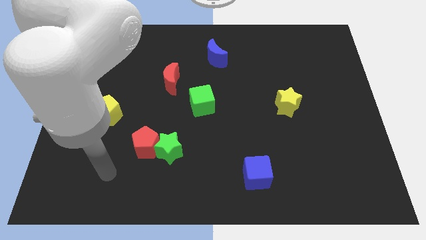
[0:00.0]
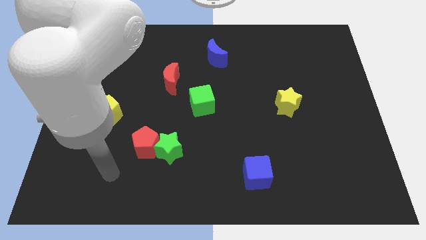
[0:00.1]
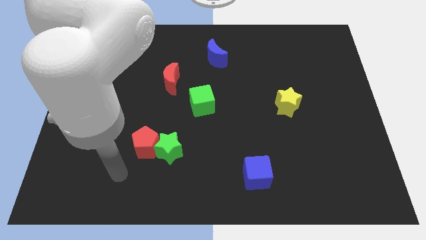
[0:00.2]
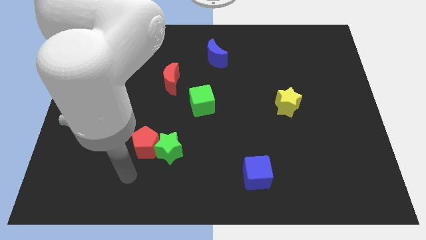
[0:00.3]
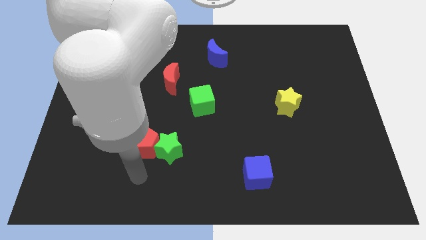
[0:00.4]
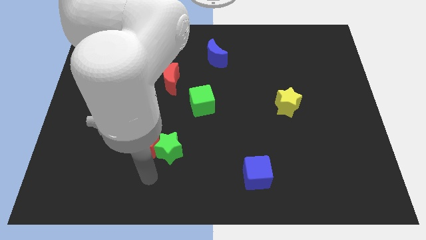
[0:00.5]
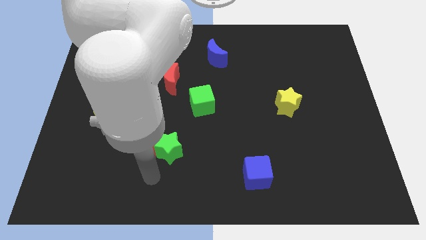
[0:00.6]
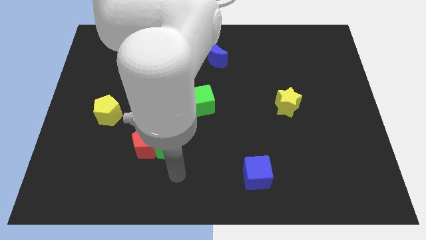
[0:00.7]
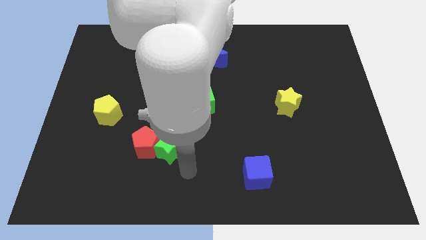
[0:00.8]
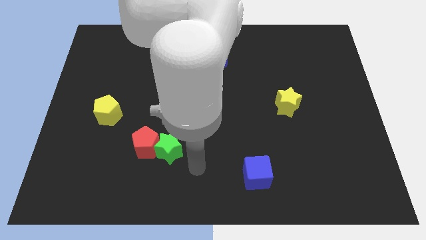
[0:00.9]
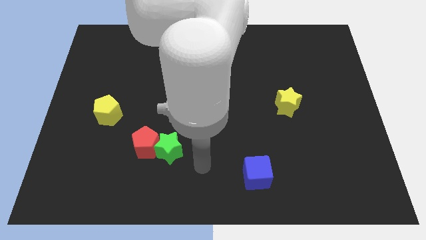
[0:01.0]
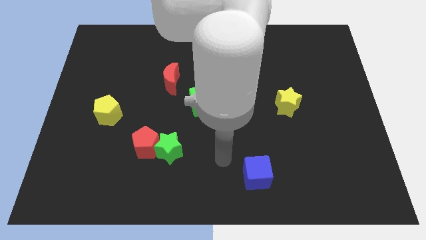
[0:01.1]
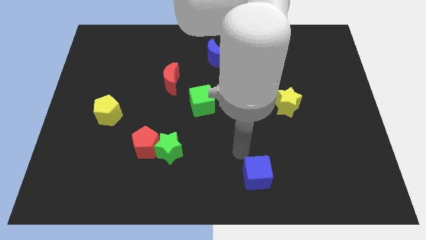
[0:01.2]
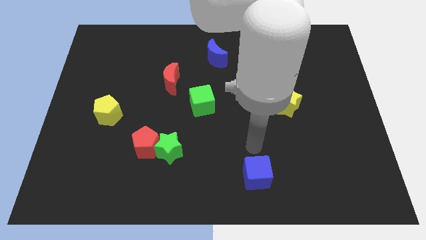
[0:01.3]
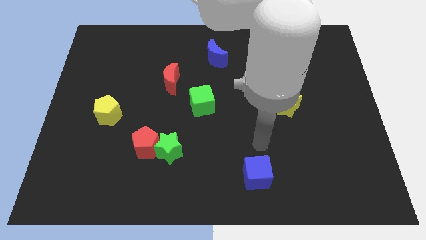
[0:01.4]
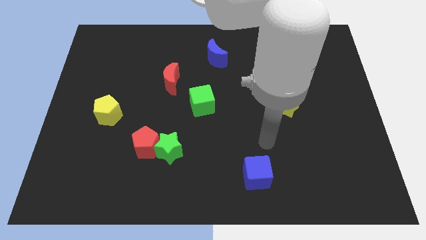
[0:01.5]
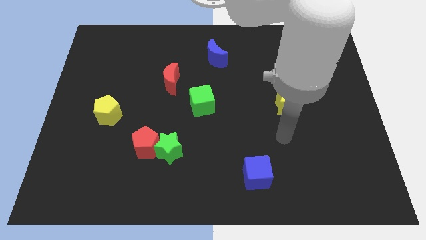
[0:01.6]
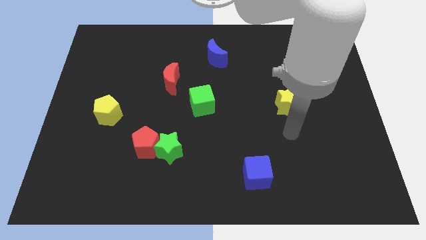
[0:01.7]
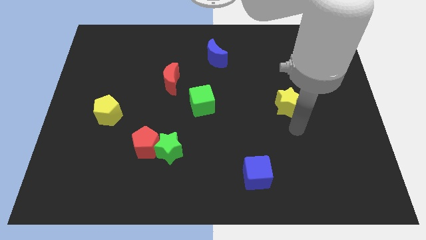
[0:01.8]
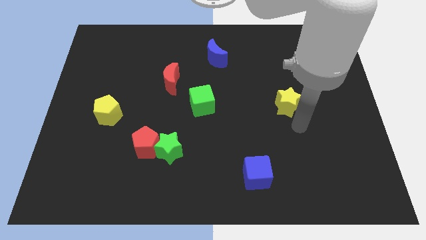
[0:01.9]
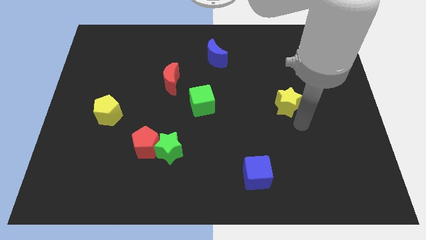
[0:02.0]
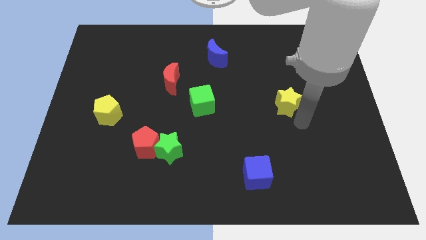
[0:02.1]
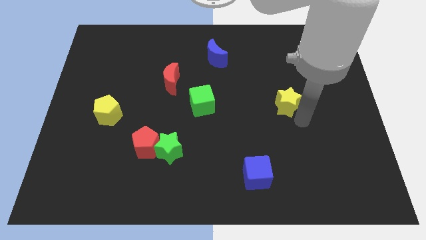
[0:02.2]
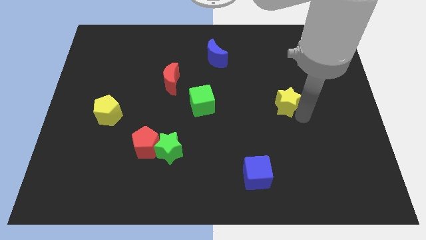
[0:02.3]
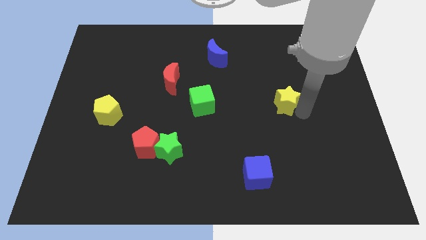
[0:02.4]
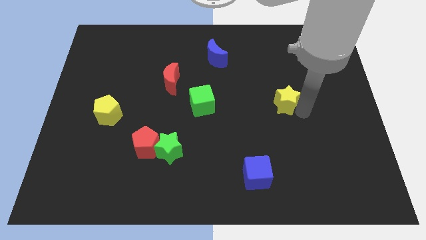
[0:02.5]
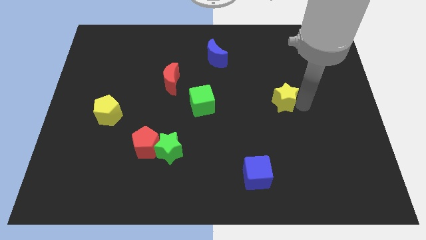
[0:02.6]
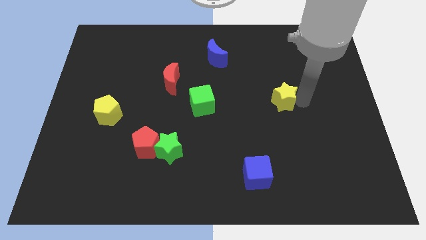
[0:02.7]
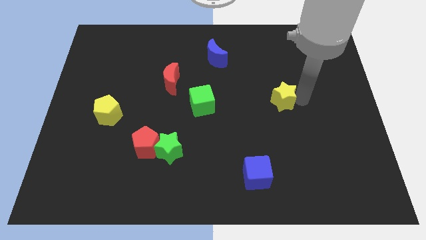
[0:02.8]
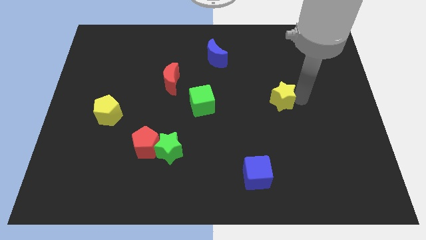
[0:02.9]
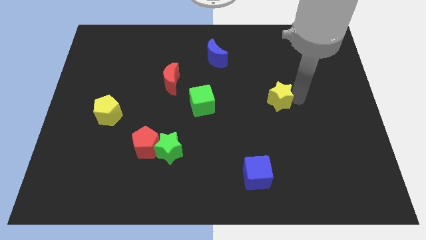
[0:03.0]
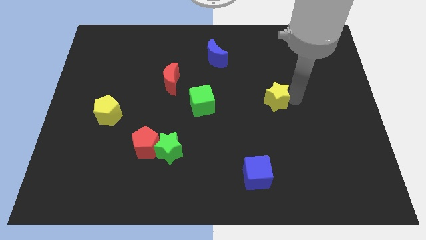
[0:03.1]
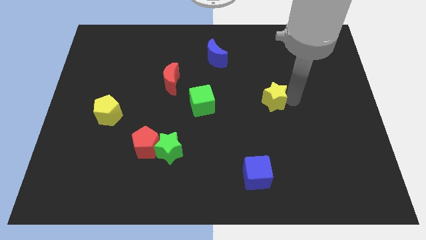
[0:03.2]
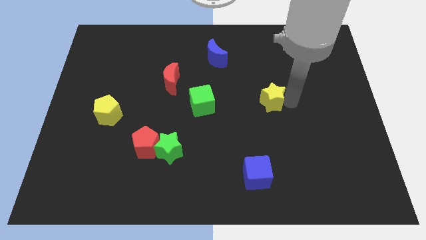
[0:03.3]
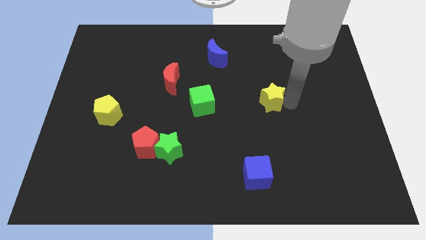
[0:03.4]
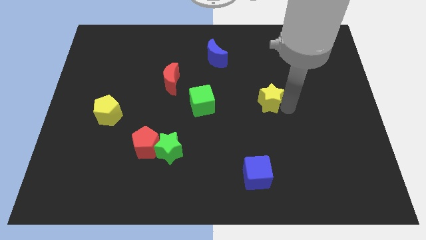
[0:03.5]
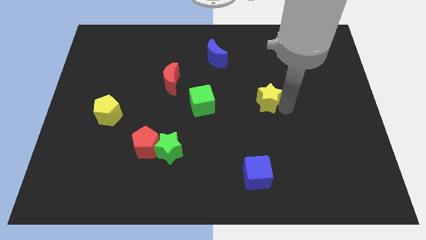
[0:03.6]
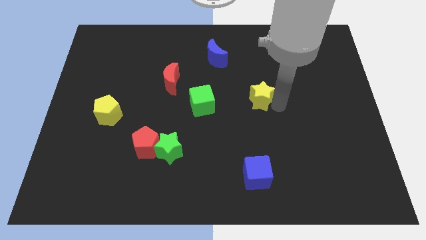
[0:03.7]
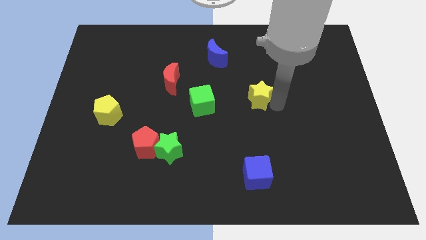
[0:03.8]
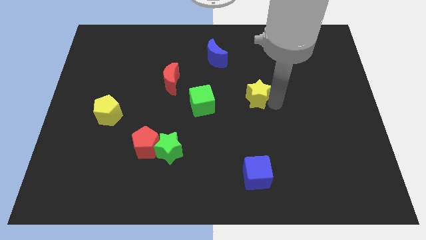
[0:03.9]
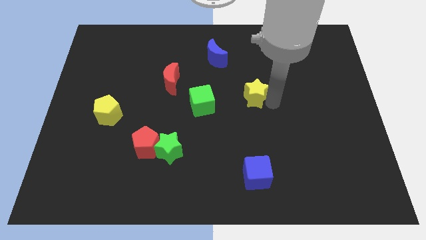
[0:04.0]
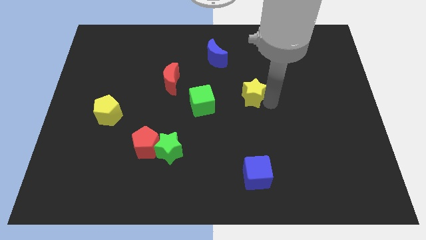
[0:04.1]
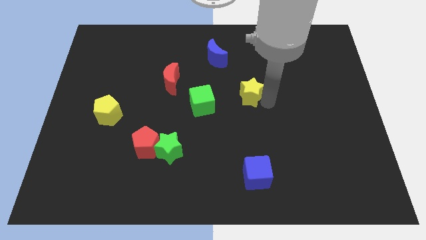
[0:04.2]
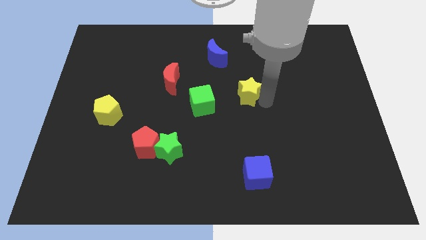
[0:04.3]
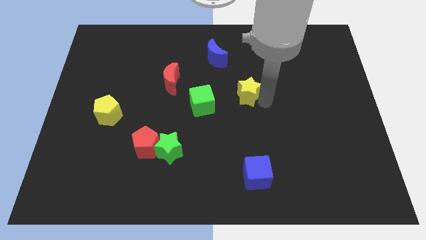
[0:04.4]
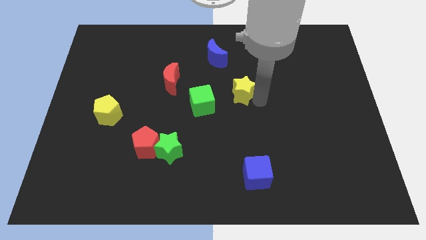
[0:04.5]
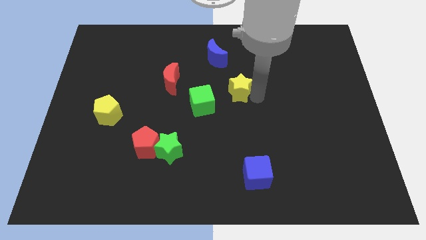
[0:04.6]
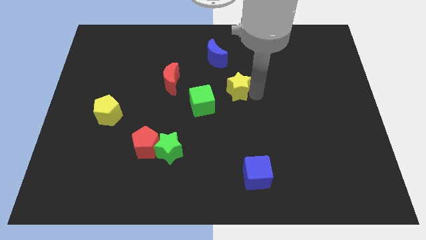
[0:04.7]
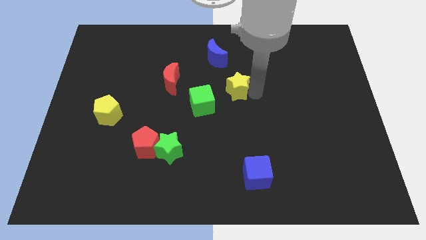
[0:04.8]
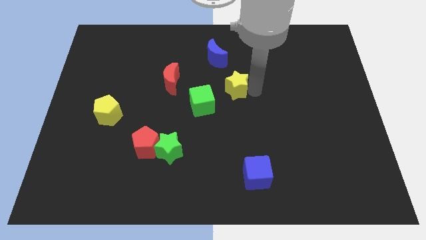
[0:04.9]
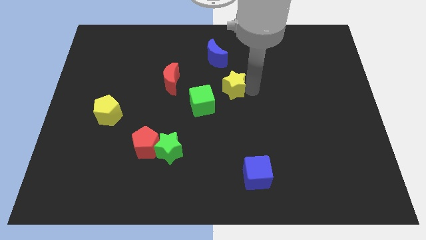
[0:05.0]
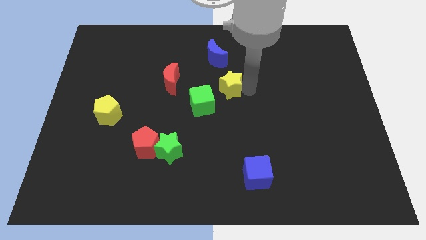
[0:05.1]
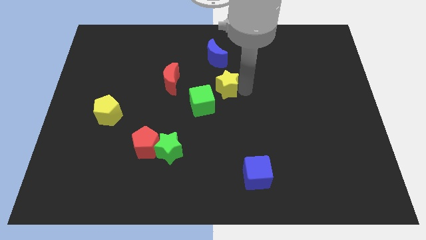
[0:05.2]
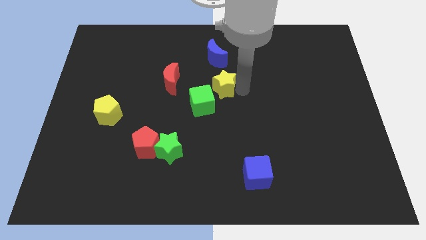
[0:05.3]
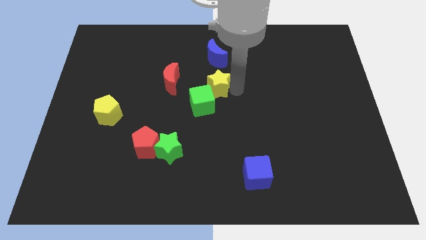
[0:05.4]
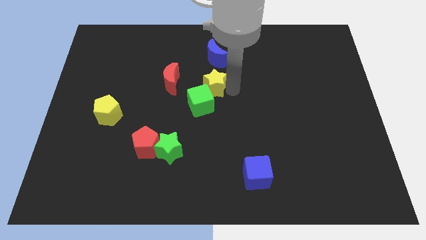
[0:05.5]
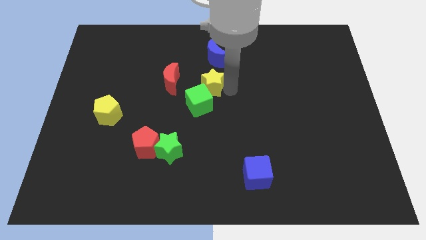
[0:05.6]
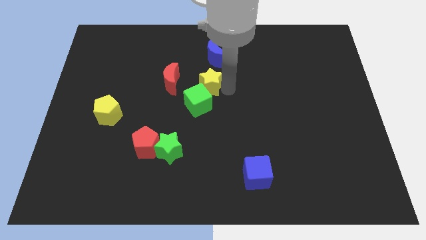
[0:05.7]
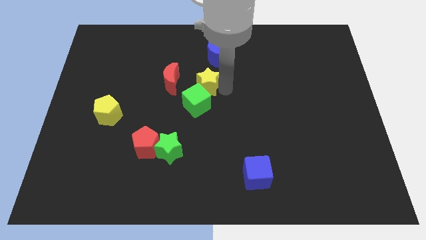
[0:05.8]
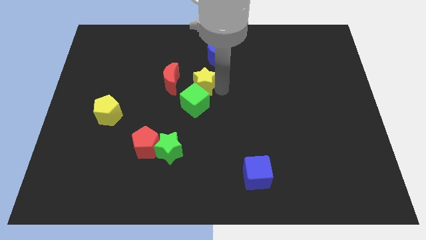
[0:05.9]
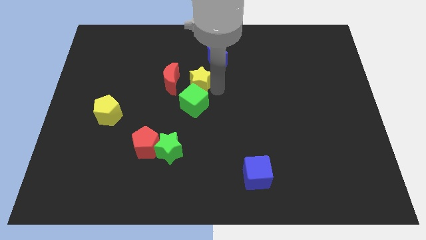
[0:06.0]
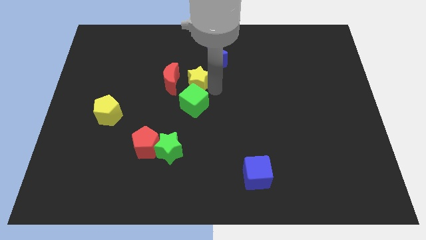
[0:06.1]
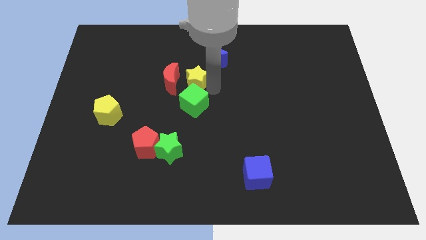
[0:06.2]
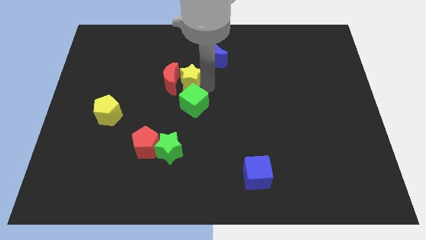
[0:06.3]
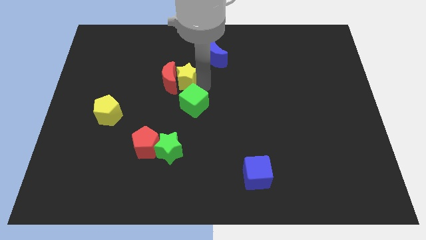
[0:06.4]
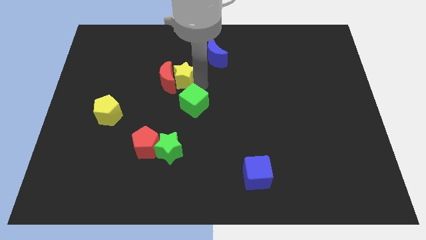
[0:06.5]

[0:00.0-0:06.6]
put the yellow star close to the red moon

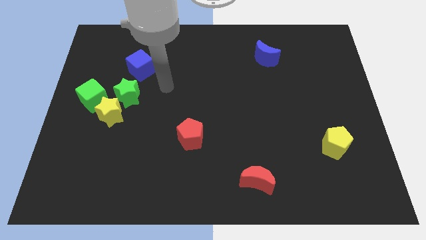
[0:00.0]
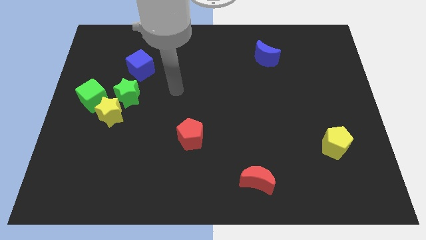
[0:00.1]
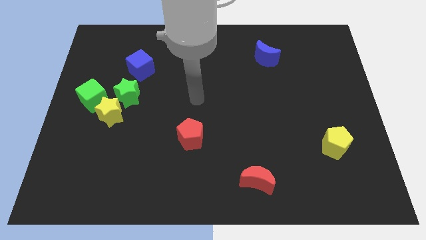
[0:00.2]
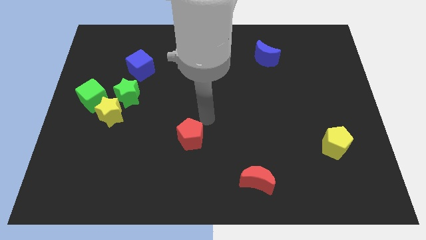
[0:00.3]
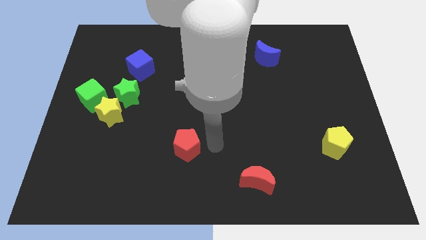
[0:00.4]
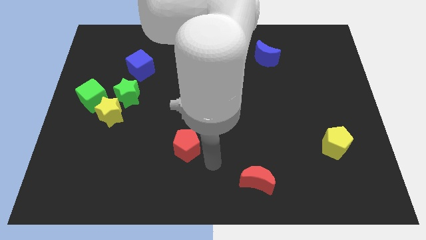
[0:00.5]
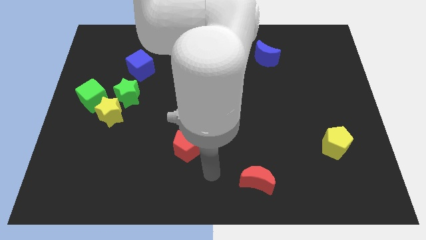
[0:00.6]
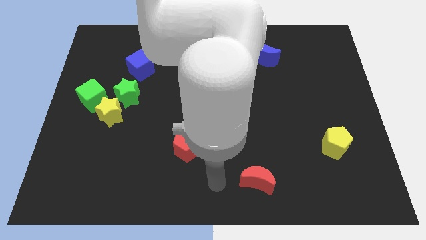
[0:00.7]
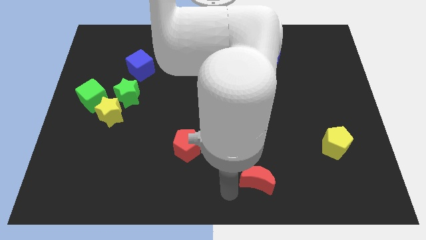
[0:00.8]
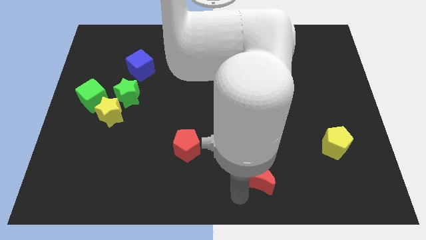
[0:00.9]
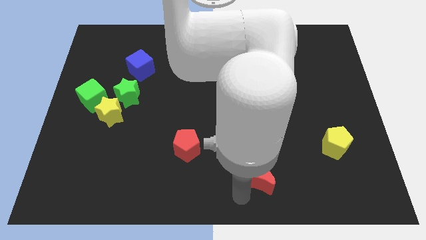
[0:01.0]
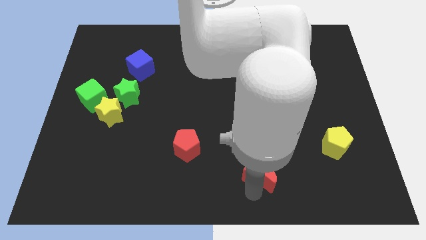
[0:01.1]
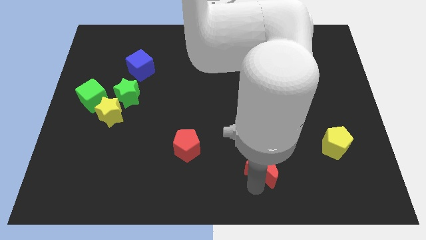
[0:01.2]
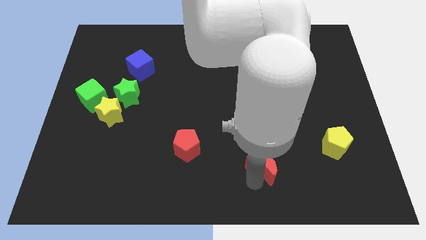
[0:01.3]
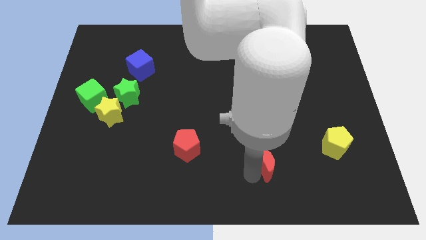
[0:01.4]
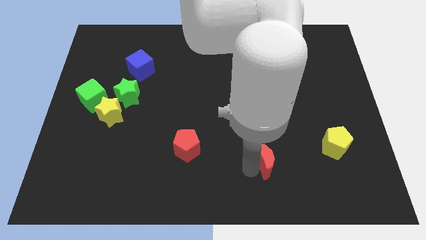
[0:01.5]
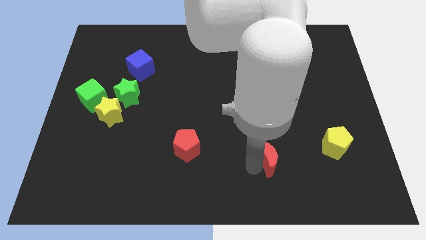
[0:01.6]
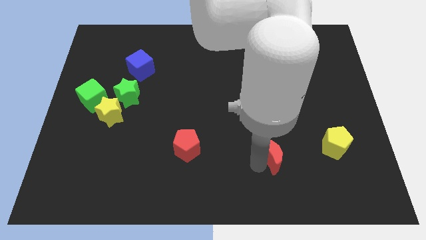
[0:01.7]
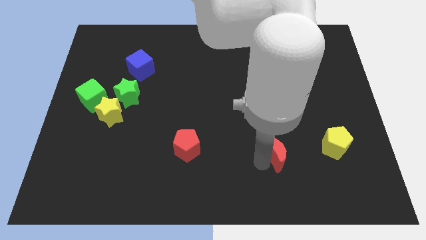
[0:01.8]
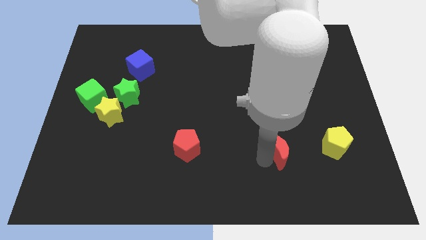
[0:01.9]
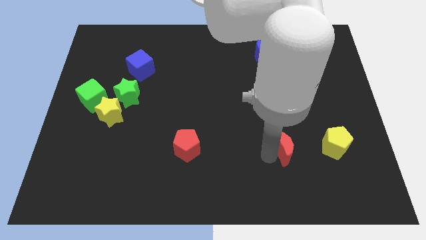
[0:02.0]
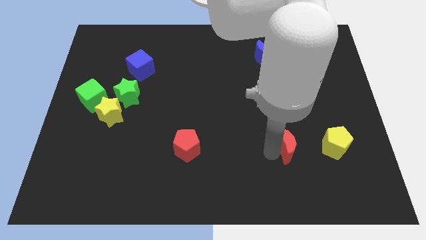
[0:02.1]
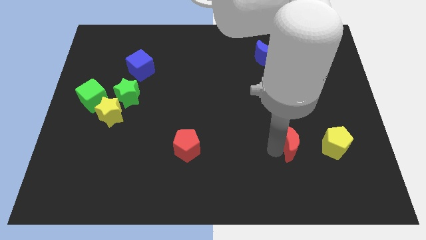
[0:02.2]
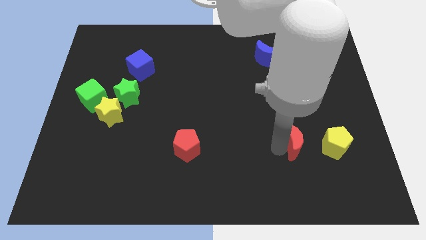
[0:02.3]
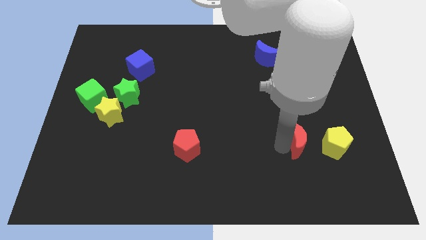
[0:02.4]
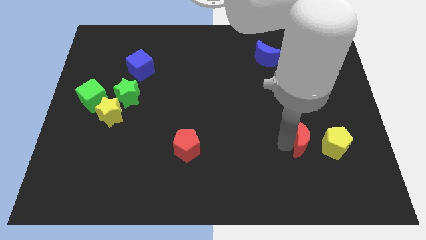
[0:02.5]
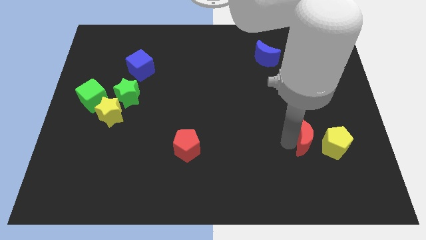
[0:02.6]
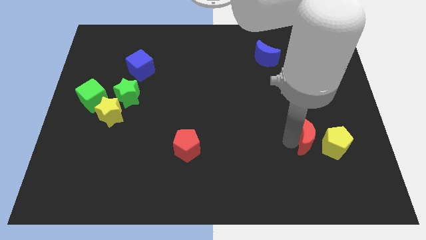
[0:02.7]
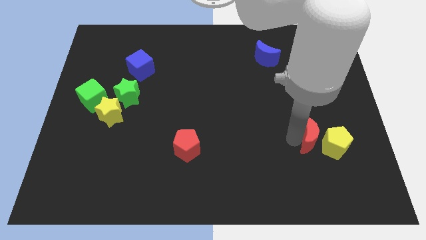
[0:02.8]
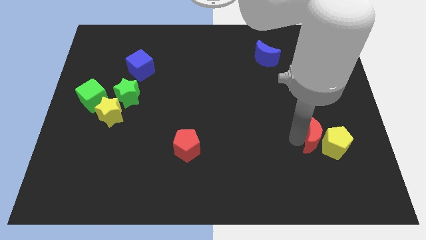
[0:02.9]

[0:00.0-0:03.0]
slide the red moon next to the yellow pentagon
